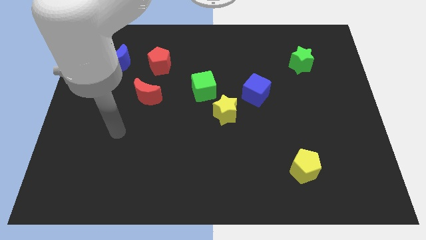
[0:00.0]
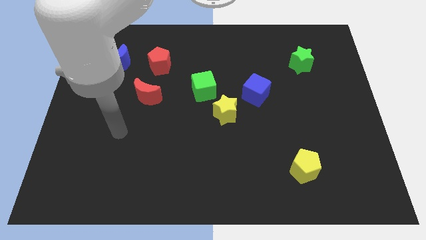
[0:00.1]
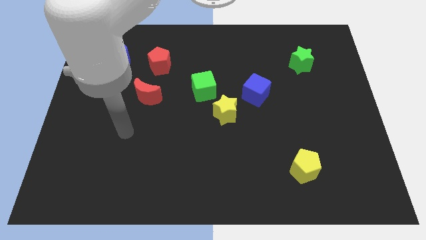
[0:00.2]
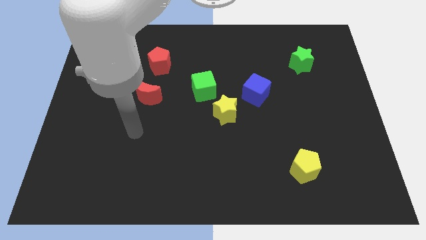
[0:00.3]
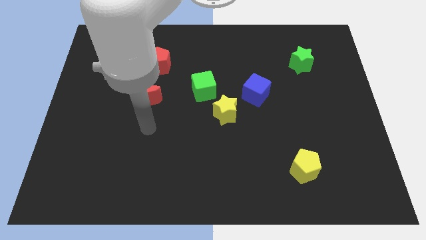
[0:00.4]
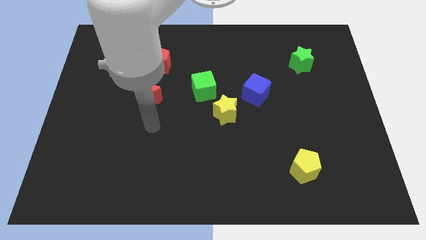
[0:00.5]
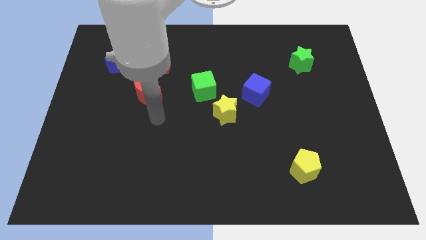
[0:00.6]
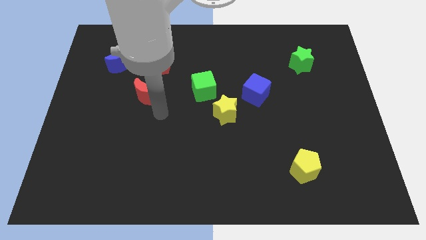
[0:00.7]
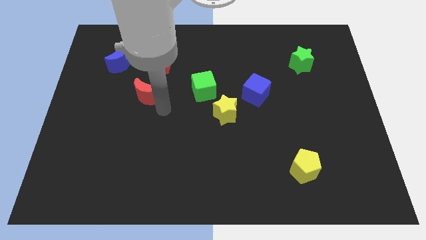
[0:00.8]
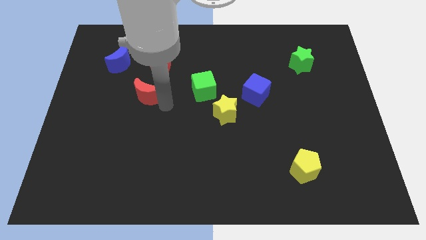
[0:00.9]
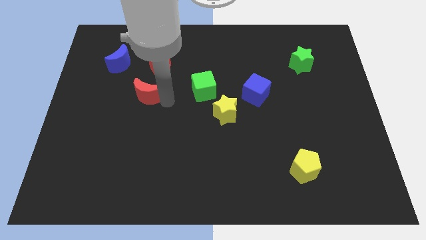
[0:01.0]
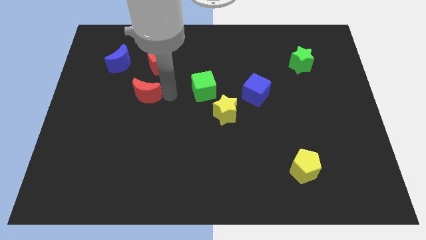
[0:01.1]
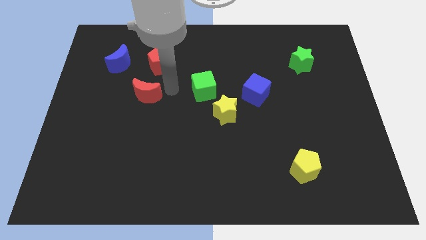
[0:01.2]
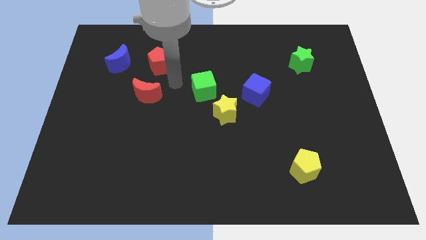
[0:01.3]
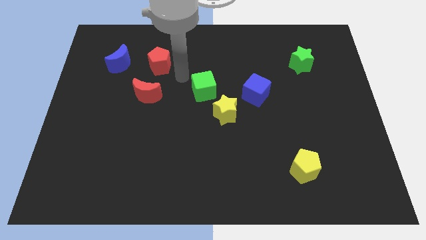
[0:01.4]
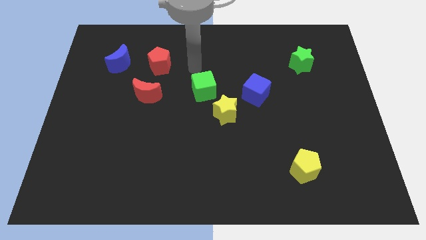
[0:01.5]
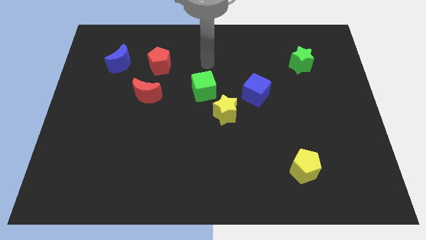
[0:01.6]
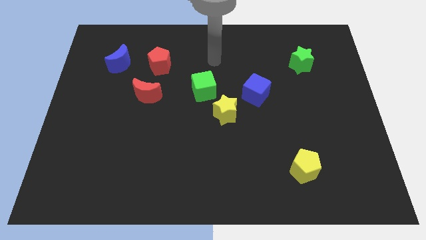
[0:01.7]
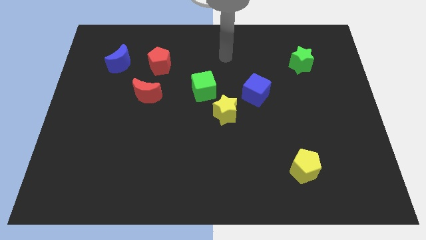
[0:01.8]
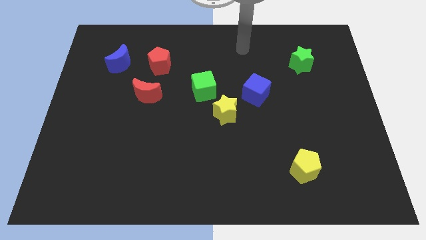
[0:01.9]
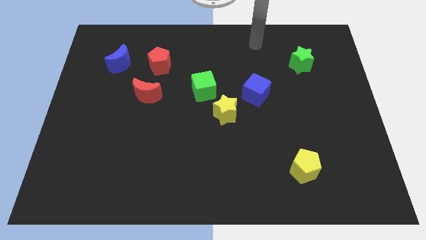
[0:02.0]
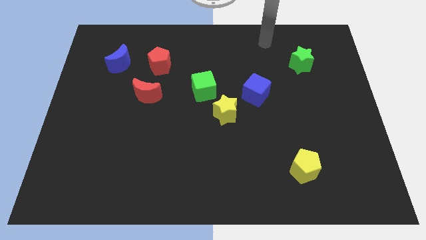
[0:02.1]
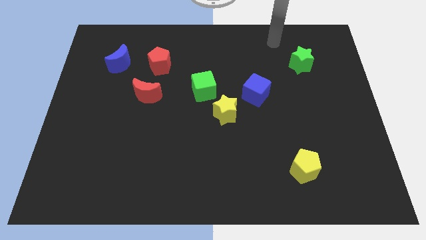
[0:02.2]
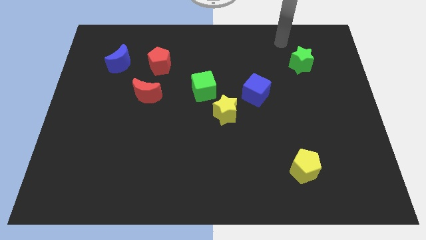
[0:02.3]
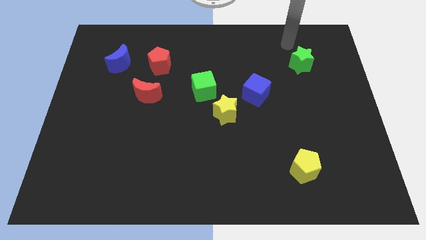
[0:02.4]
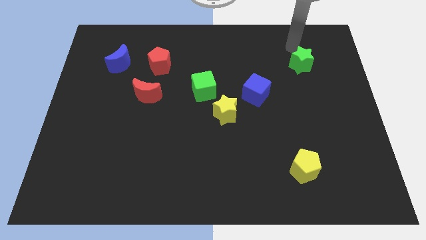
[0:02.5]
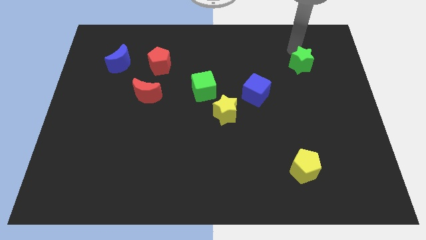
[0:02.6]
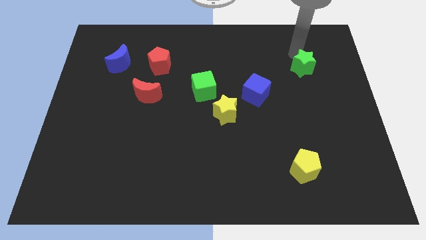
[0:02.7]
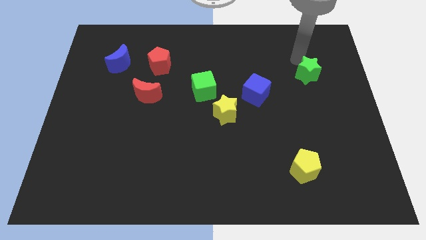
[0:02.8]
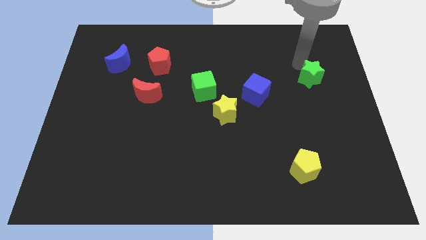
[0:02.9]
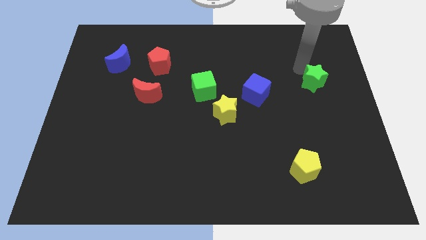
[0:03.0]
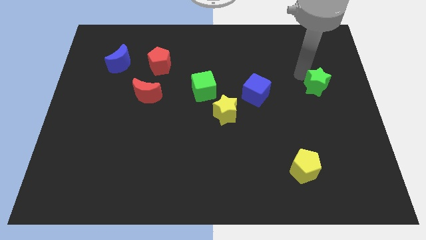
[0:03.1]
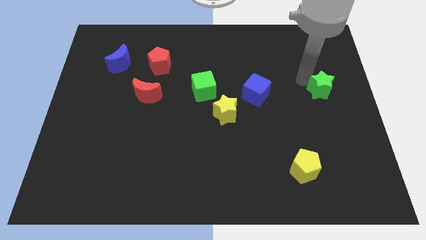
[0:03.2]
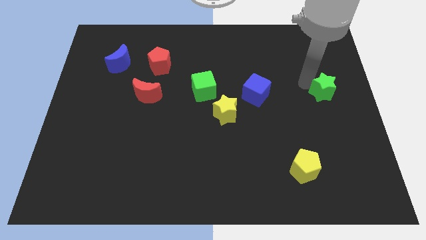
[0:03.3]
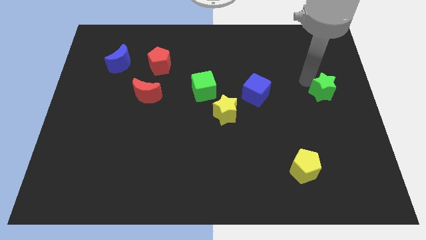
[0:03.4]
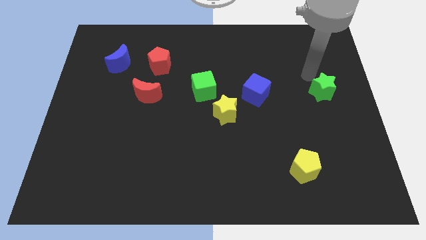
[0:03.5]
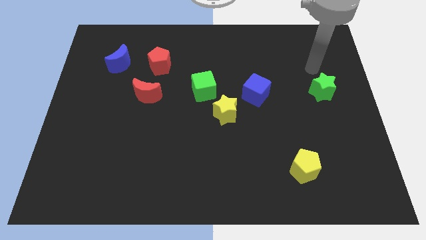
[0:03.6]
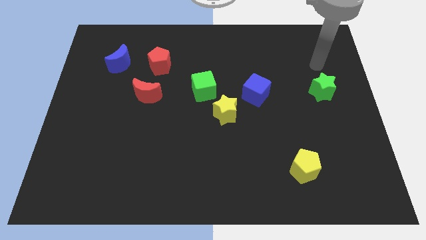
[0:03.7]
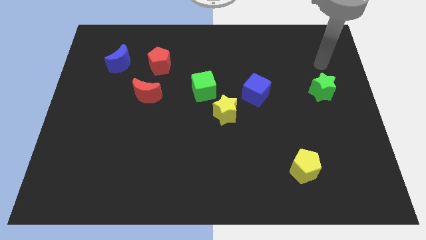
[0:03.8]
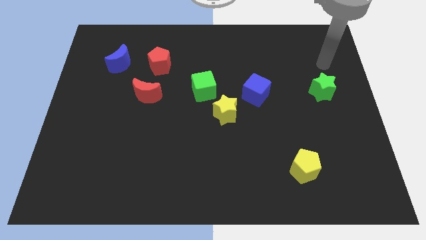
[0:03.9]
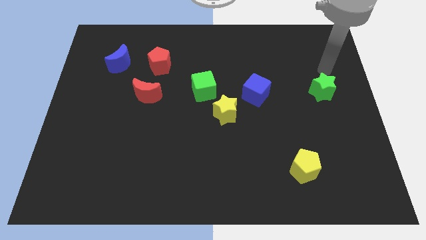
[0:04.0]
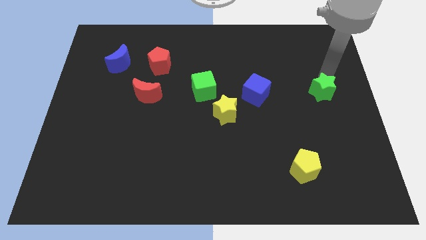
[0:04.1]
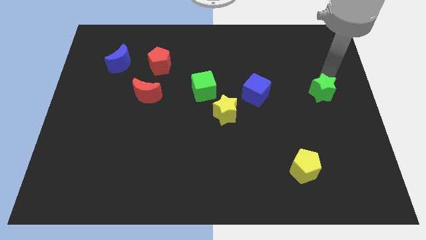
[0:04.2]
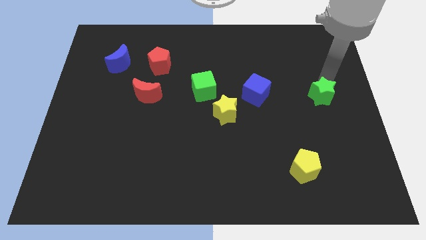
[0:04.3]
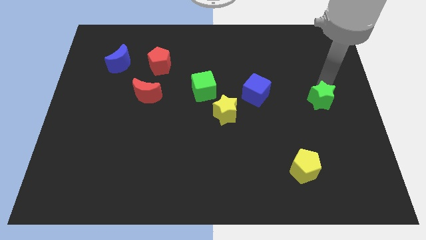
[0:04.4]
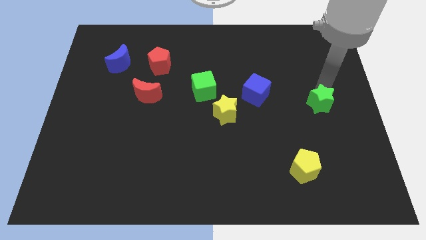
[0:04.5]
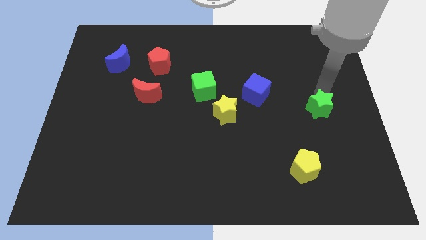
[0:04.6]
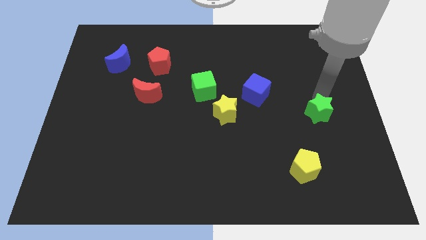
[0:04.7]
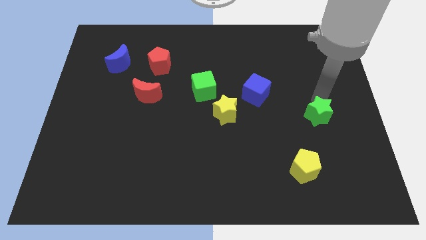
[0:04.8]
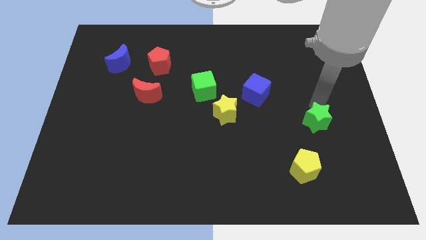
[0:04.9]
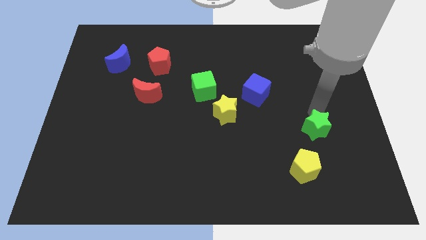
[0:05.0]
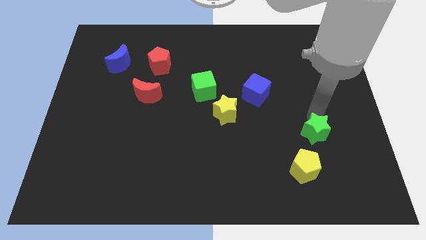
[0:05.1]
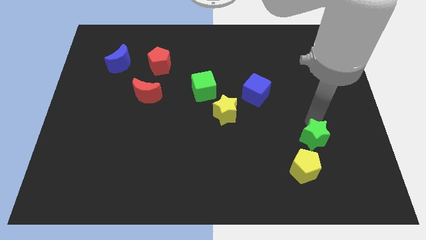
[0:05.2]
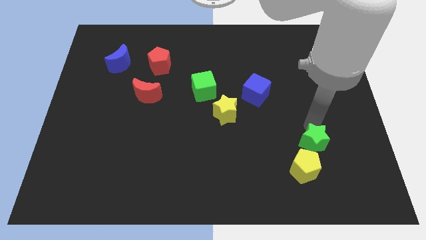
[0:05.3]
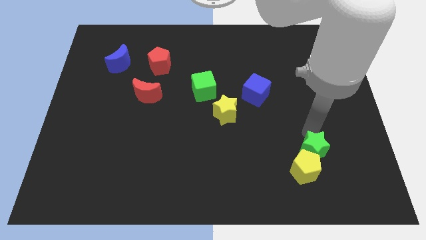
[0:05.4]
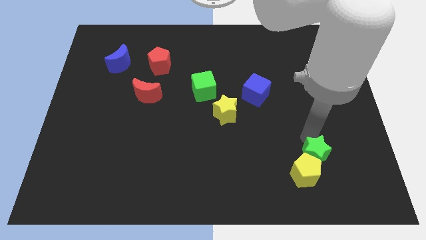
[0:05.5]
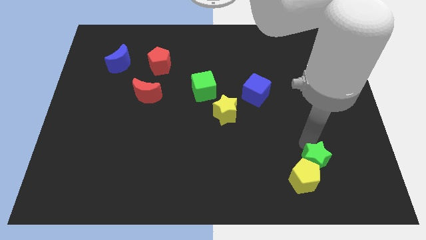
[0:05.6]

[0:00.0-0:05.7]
slide the green star next to the yellow pentagon

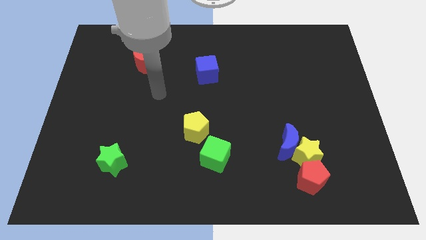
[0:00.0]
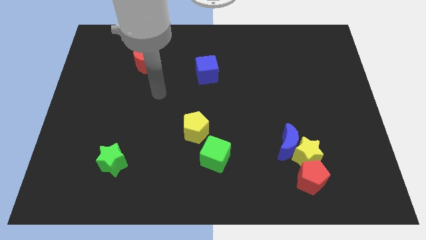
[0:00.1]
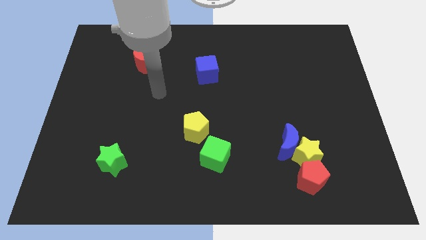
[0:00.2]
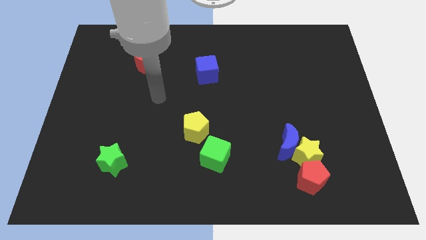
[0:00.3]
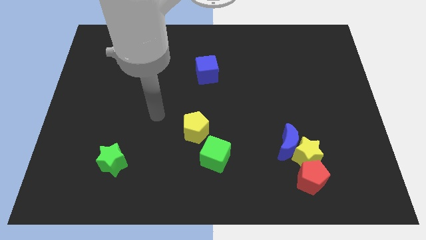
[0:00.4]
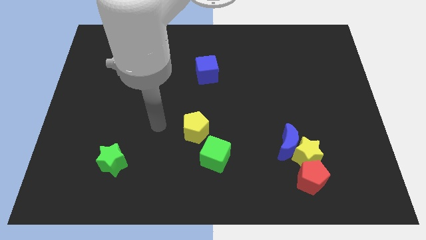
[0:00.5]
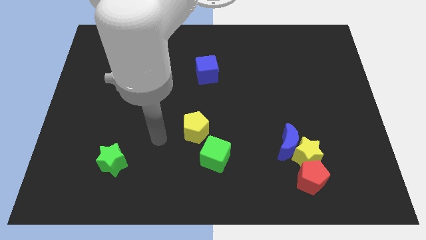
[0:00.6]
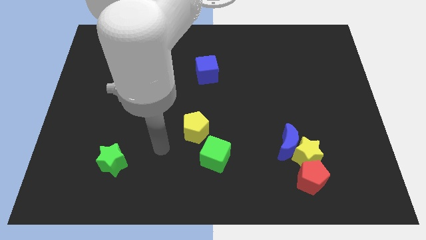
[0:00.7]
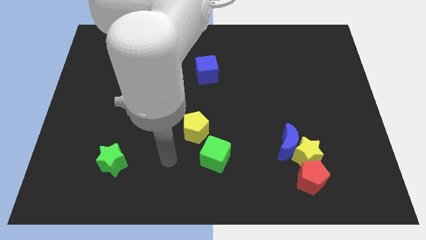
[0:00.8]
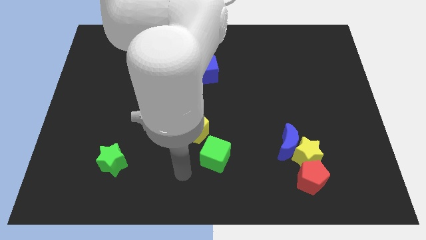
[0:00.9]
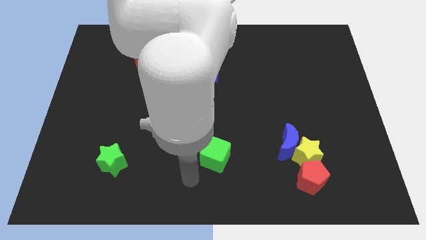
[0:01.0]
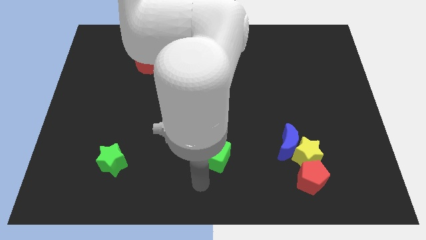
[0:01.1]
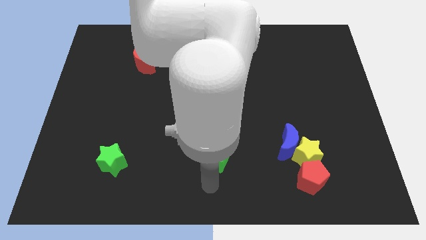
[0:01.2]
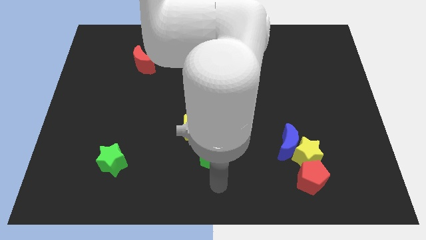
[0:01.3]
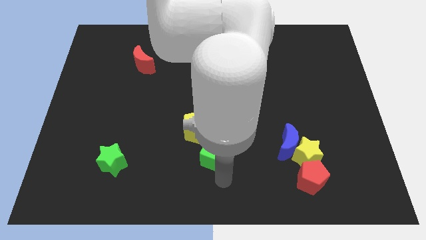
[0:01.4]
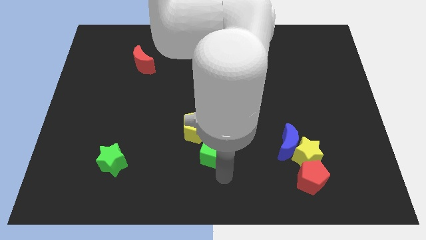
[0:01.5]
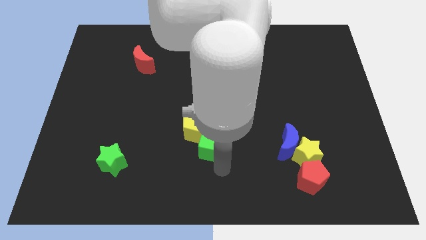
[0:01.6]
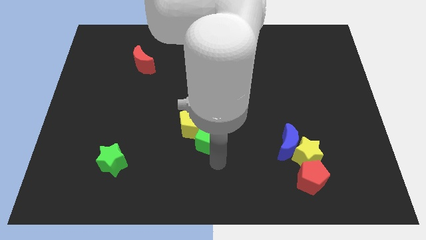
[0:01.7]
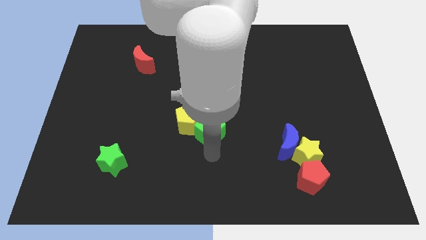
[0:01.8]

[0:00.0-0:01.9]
move the green cube next to the yellow pentagon

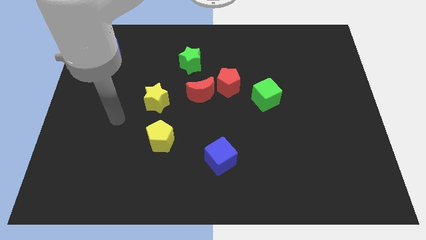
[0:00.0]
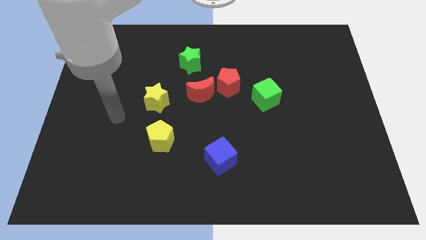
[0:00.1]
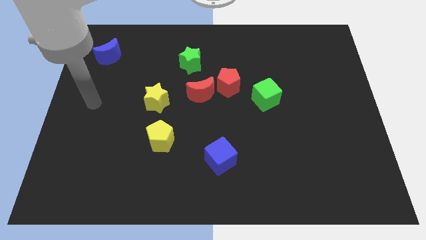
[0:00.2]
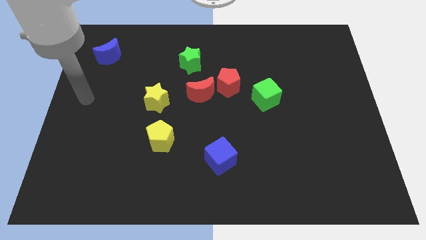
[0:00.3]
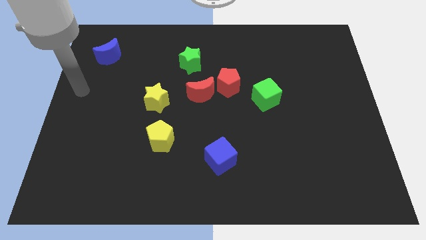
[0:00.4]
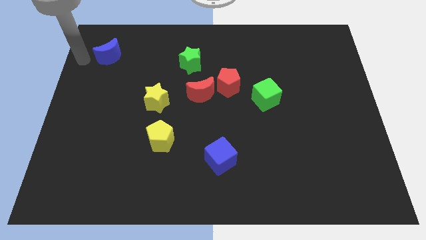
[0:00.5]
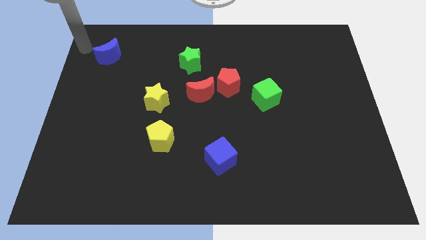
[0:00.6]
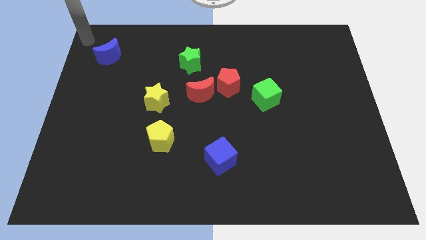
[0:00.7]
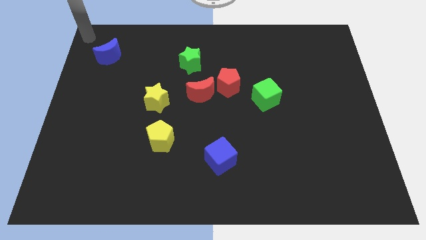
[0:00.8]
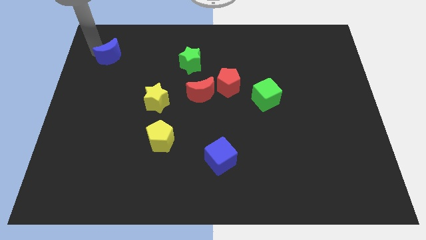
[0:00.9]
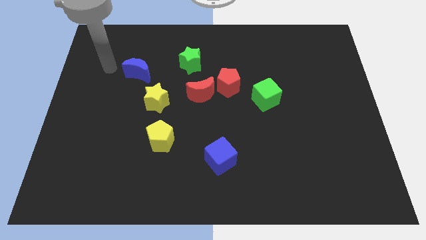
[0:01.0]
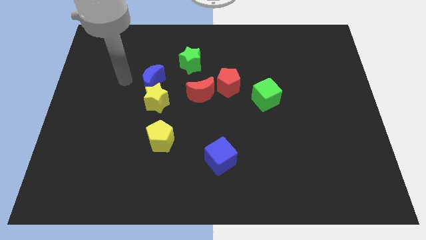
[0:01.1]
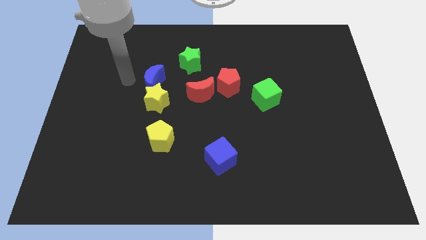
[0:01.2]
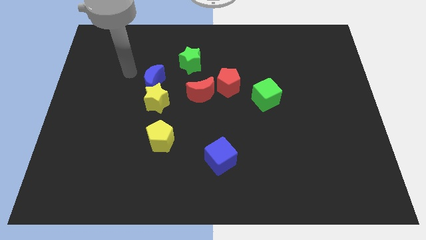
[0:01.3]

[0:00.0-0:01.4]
push the blue moon next to the yellow star
